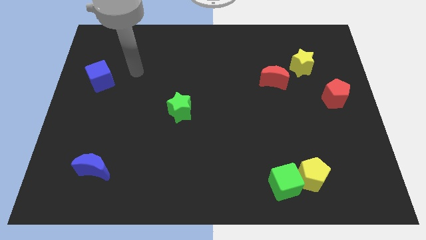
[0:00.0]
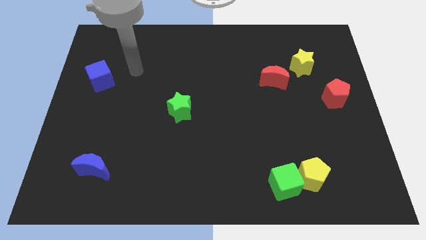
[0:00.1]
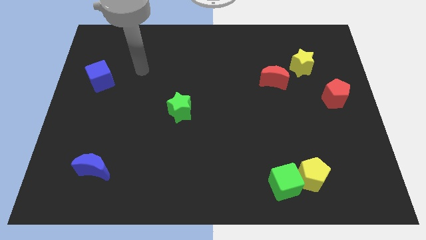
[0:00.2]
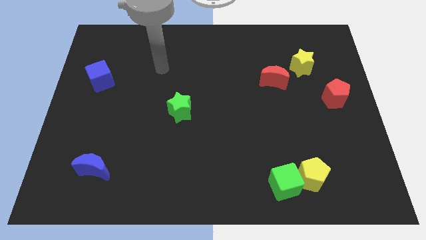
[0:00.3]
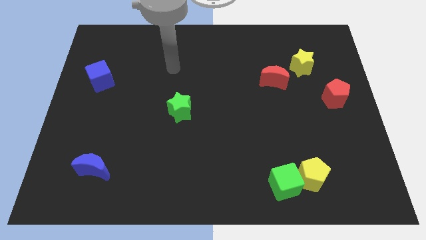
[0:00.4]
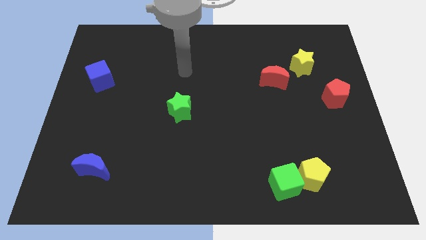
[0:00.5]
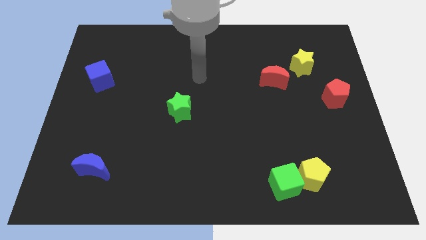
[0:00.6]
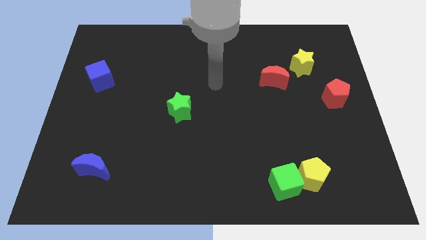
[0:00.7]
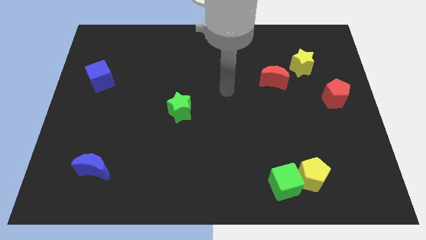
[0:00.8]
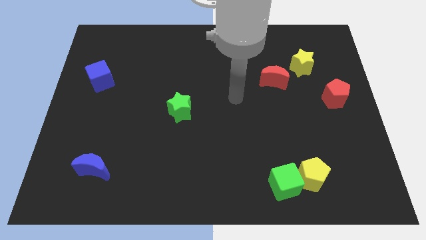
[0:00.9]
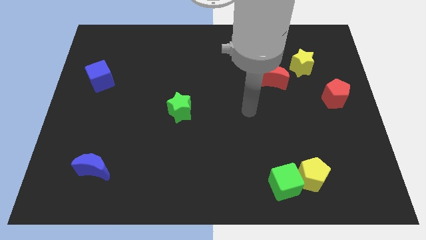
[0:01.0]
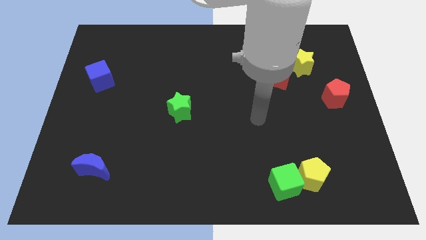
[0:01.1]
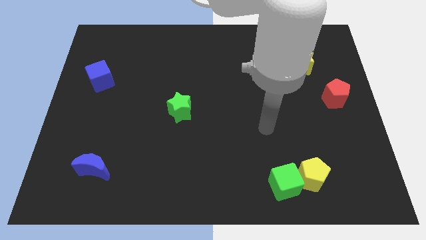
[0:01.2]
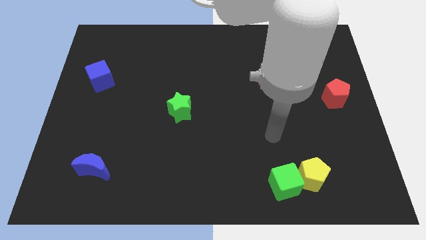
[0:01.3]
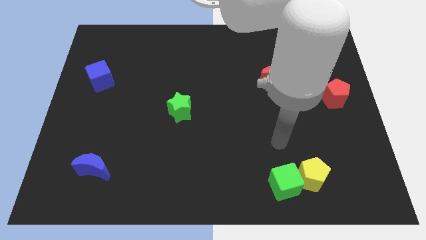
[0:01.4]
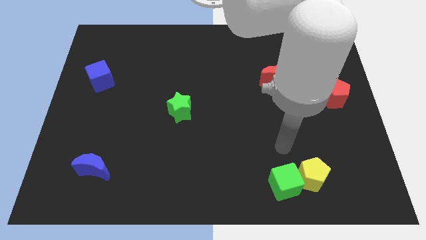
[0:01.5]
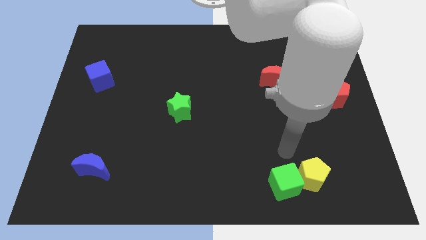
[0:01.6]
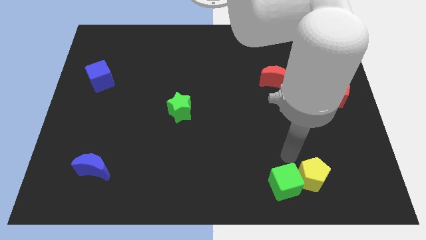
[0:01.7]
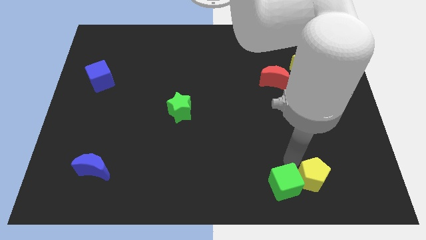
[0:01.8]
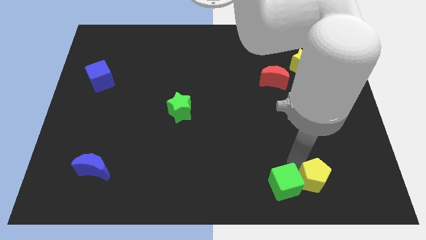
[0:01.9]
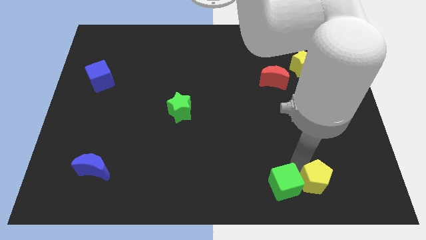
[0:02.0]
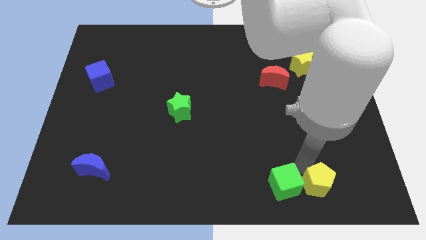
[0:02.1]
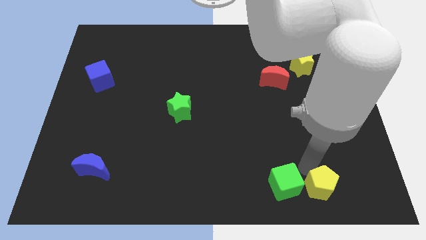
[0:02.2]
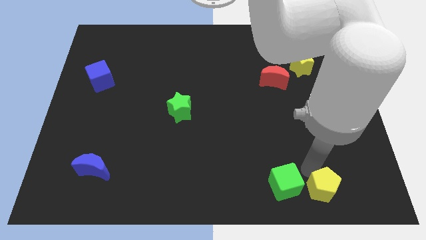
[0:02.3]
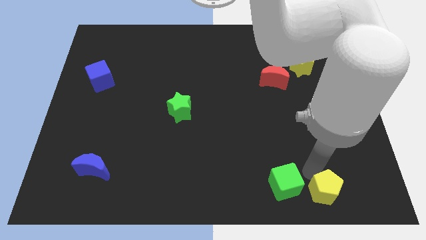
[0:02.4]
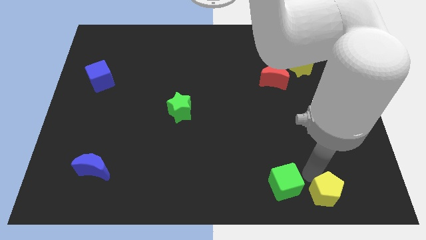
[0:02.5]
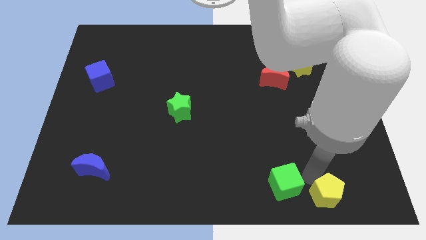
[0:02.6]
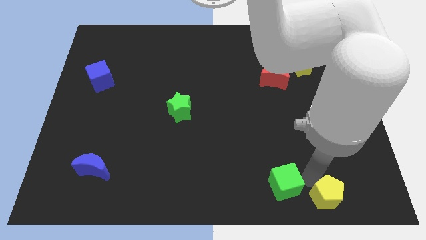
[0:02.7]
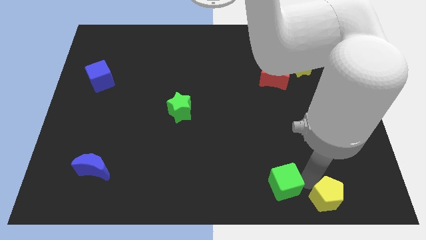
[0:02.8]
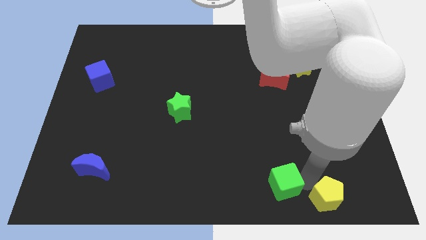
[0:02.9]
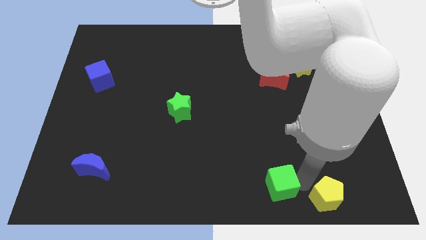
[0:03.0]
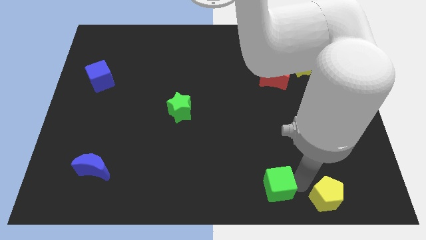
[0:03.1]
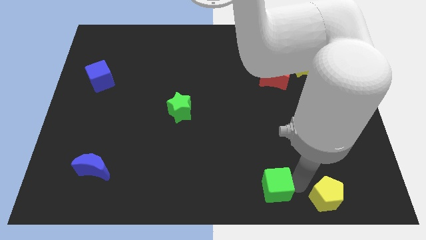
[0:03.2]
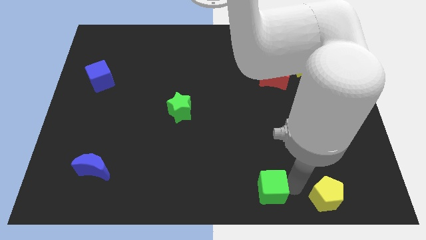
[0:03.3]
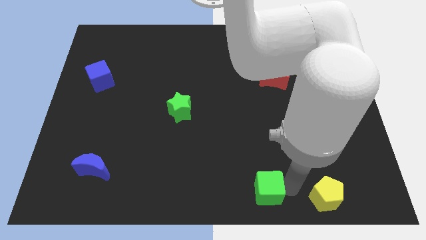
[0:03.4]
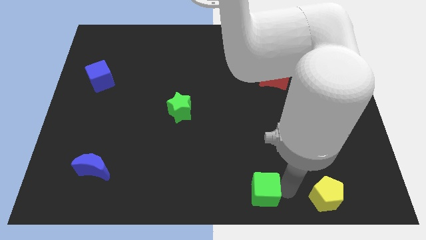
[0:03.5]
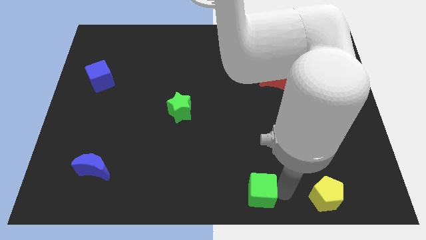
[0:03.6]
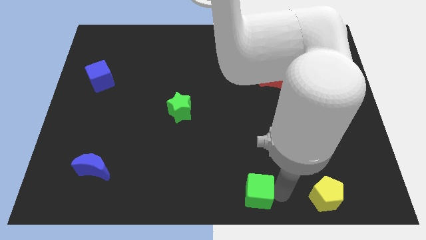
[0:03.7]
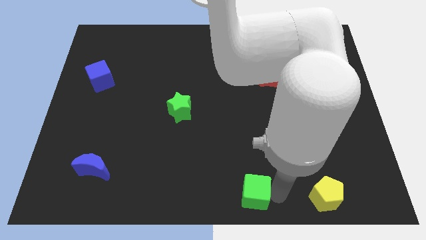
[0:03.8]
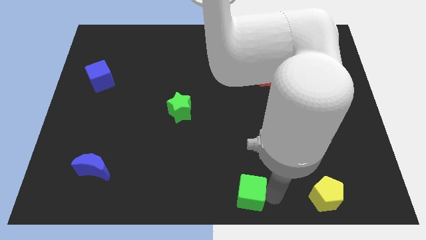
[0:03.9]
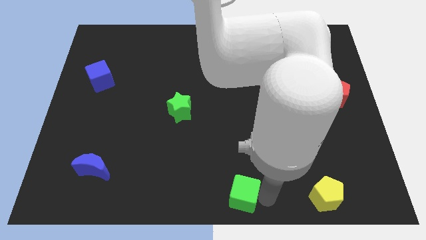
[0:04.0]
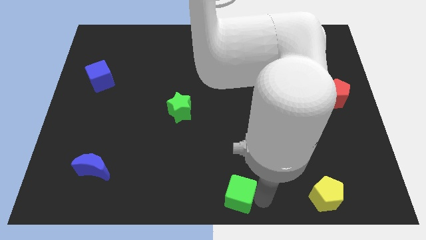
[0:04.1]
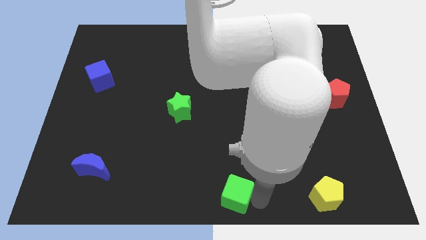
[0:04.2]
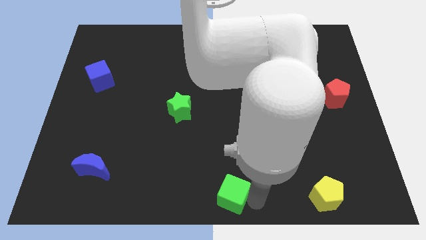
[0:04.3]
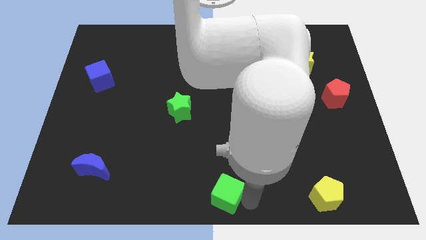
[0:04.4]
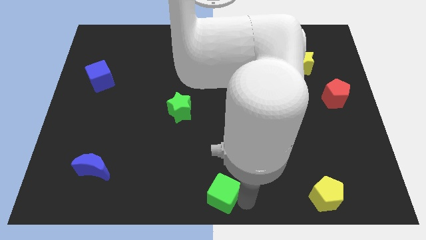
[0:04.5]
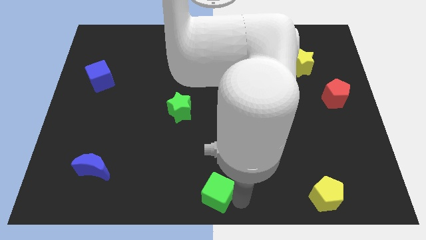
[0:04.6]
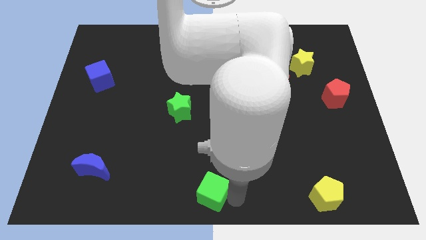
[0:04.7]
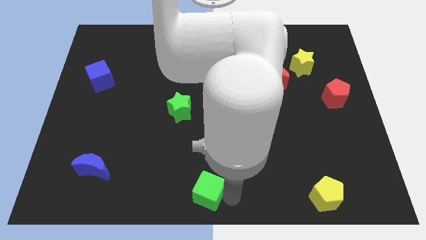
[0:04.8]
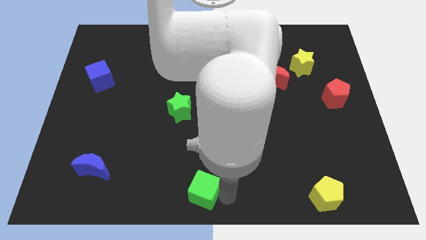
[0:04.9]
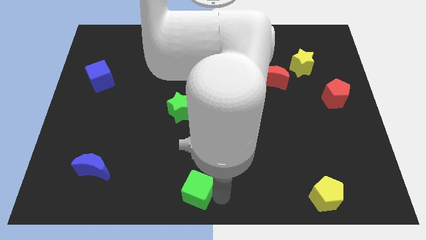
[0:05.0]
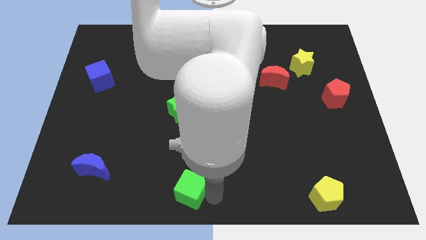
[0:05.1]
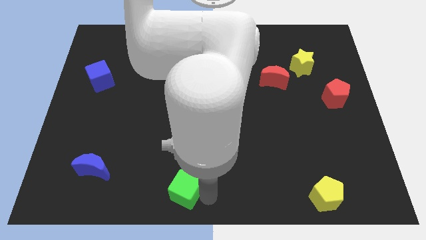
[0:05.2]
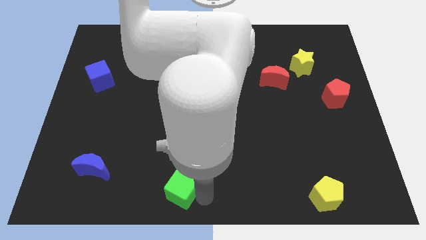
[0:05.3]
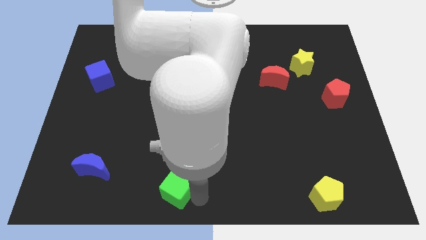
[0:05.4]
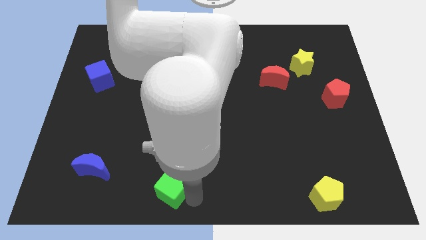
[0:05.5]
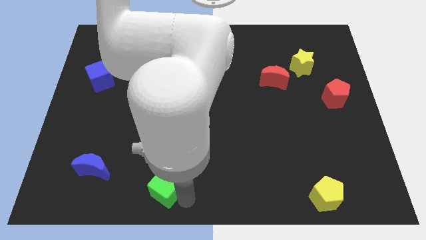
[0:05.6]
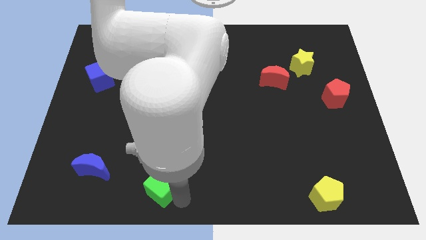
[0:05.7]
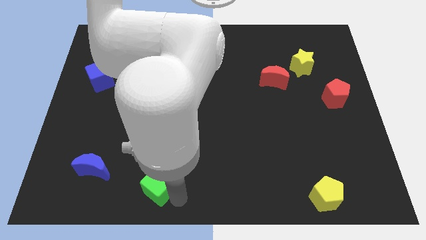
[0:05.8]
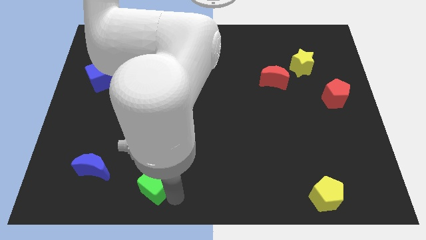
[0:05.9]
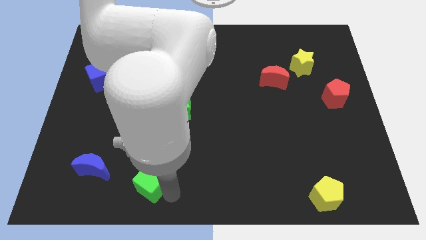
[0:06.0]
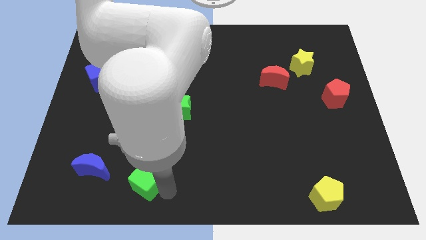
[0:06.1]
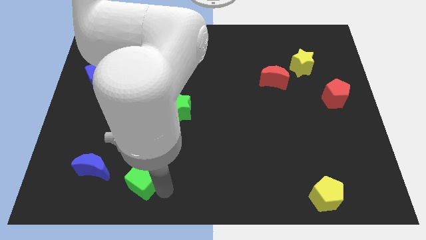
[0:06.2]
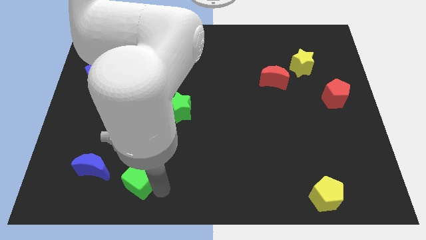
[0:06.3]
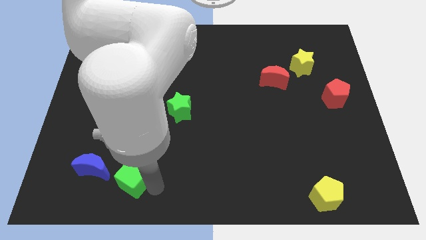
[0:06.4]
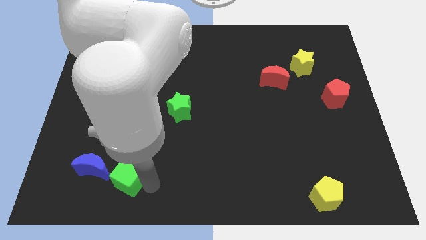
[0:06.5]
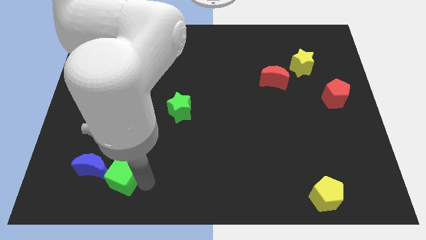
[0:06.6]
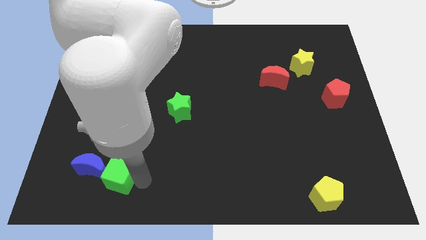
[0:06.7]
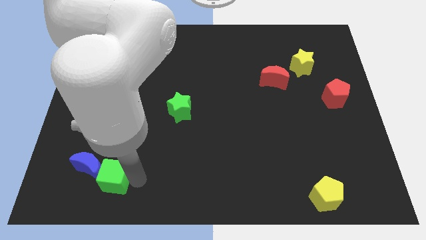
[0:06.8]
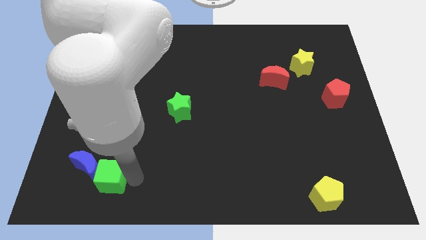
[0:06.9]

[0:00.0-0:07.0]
move the green cube to the blue moon

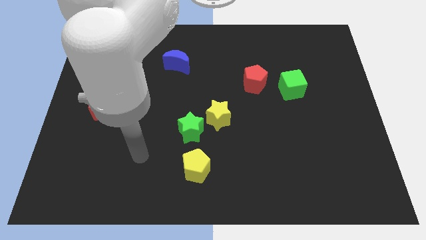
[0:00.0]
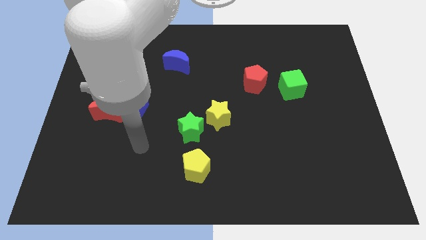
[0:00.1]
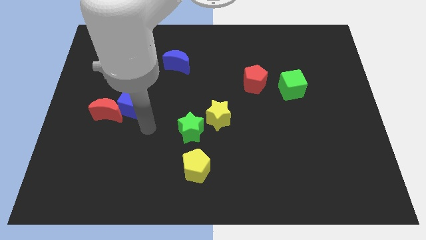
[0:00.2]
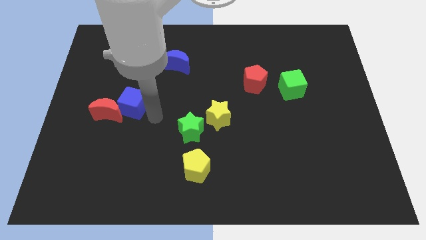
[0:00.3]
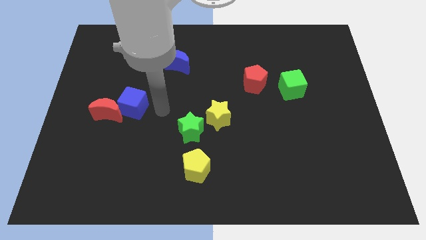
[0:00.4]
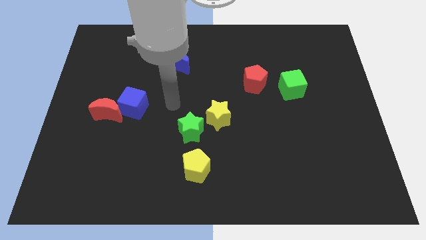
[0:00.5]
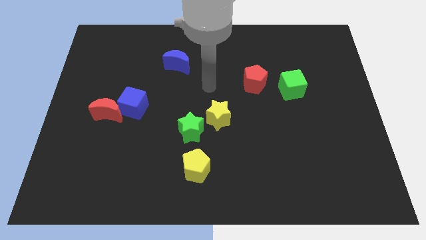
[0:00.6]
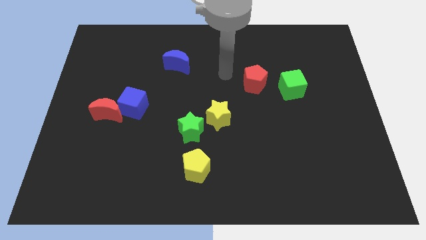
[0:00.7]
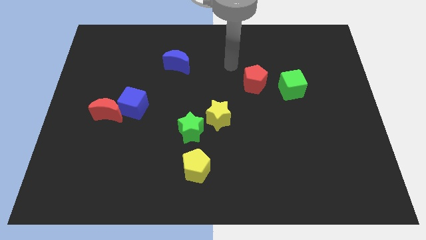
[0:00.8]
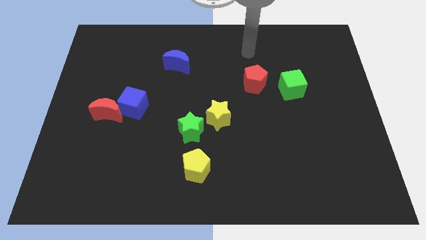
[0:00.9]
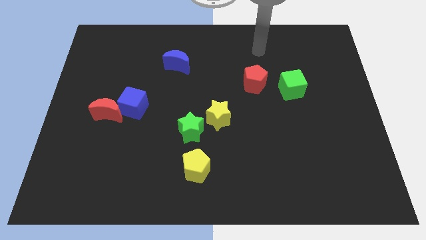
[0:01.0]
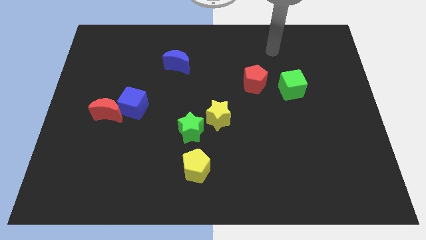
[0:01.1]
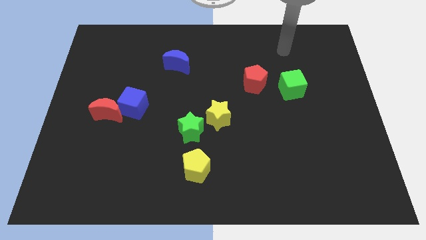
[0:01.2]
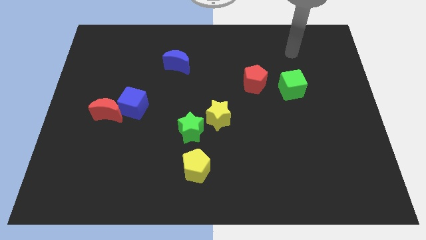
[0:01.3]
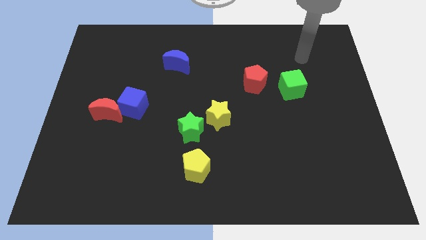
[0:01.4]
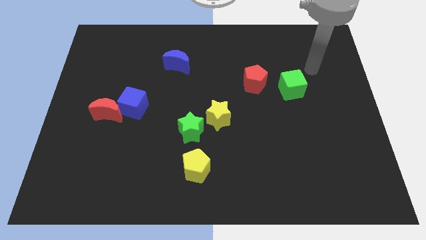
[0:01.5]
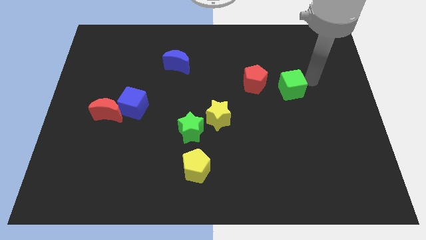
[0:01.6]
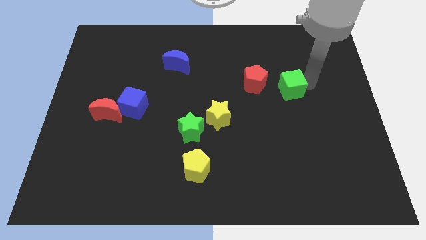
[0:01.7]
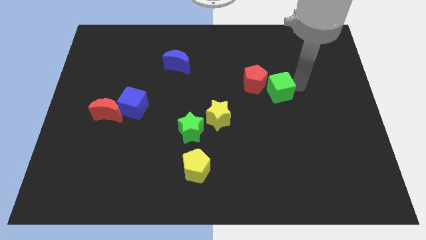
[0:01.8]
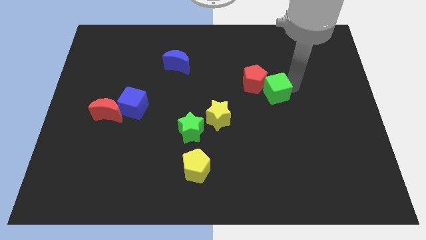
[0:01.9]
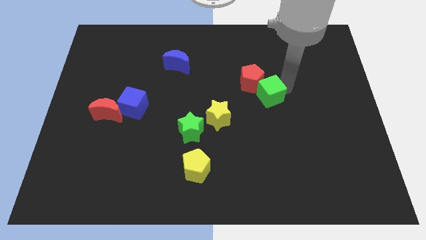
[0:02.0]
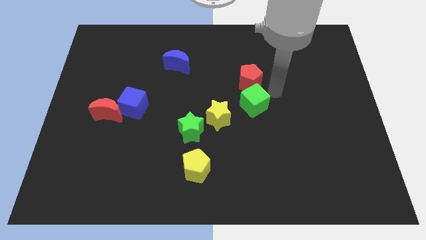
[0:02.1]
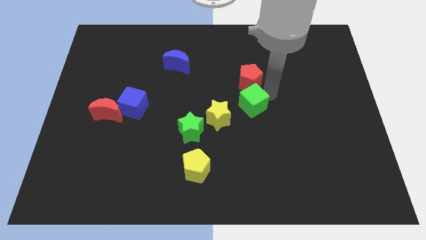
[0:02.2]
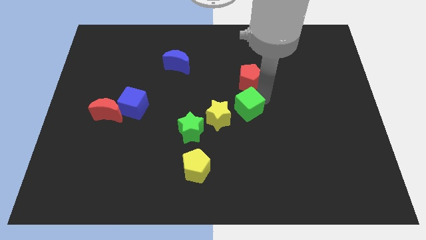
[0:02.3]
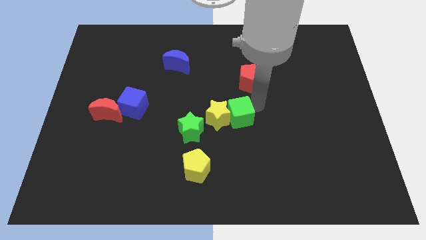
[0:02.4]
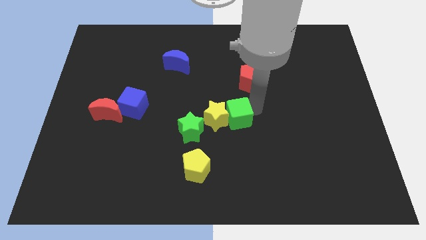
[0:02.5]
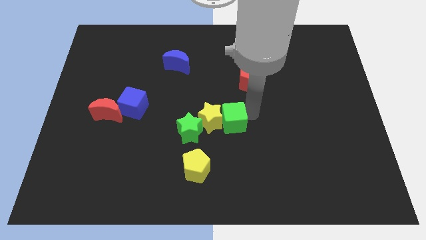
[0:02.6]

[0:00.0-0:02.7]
put the green cube to the yellow star
